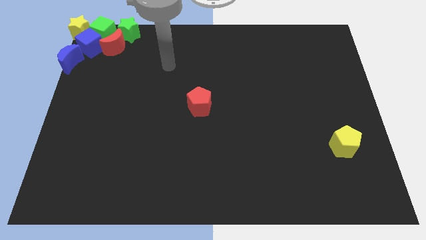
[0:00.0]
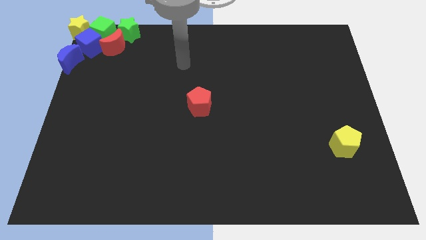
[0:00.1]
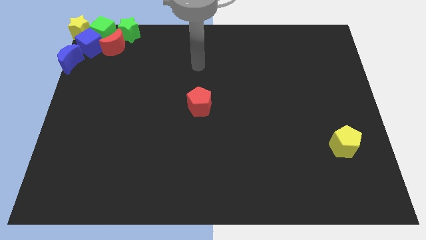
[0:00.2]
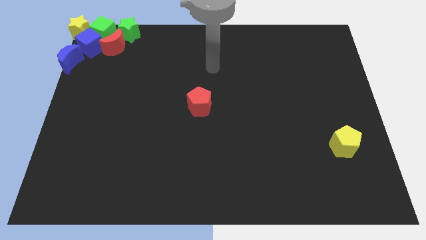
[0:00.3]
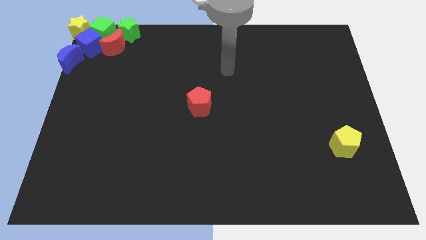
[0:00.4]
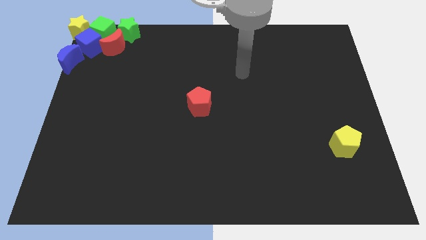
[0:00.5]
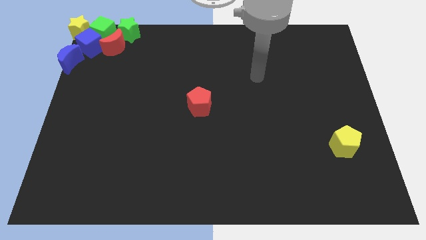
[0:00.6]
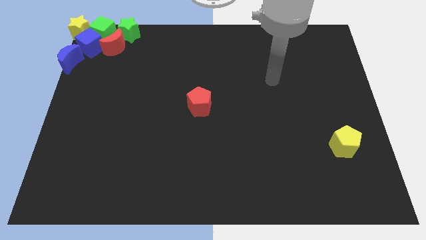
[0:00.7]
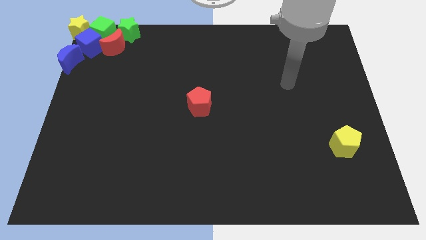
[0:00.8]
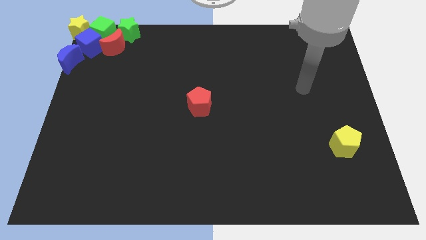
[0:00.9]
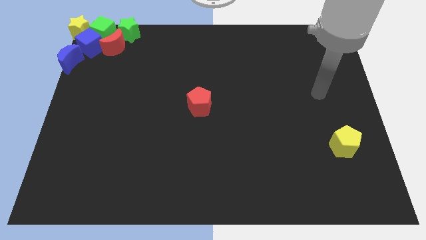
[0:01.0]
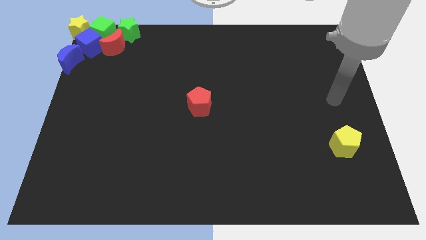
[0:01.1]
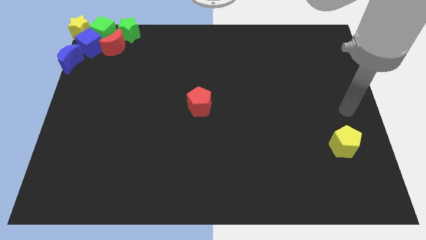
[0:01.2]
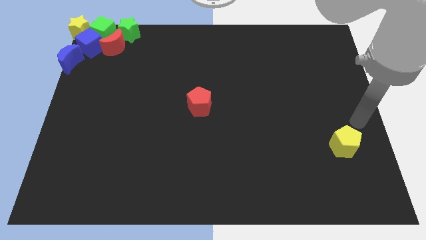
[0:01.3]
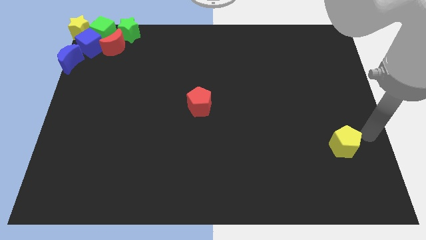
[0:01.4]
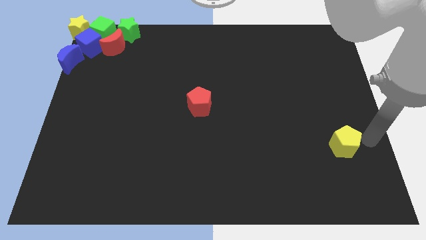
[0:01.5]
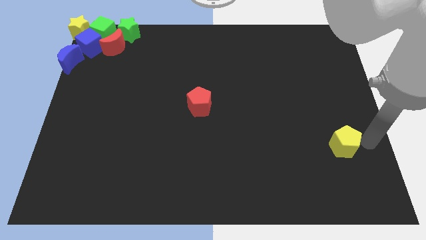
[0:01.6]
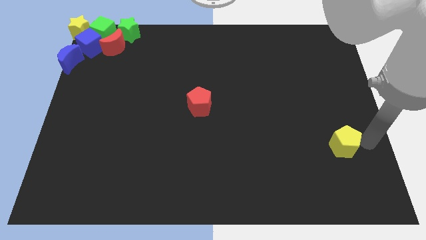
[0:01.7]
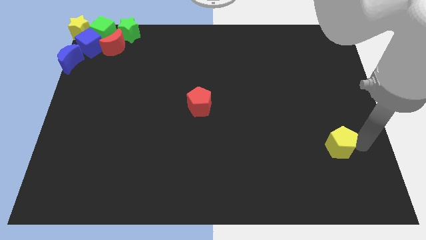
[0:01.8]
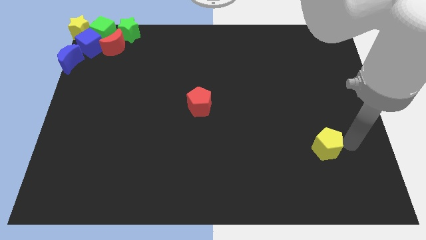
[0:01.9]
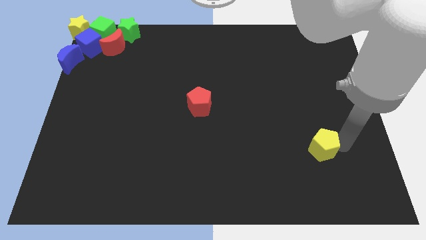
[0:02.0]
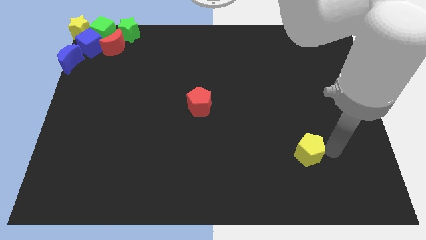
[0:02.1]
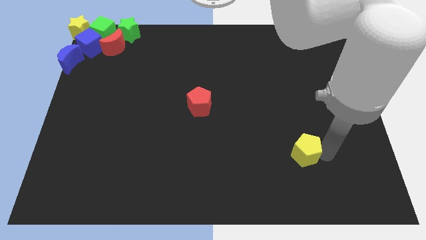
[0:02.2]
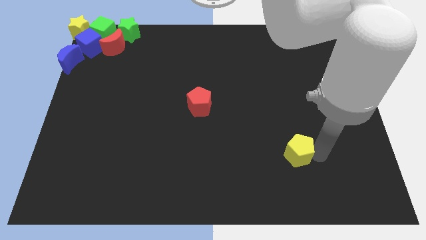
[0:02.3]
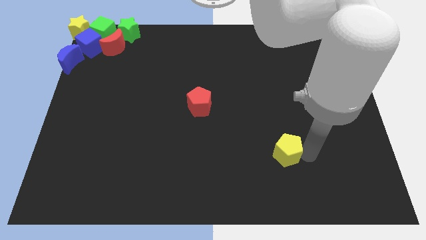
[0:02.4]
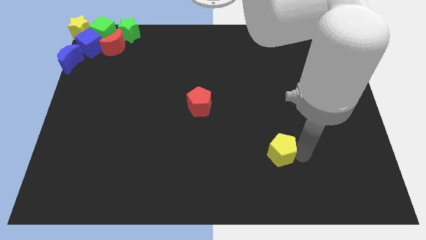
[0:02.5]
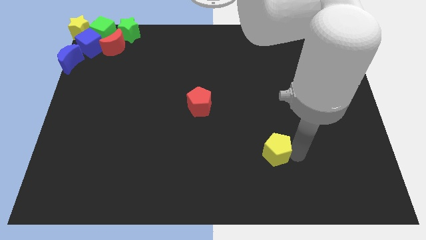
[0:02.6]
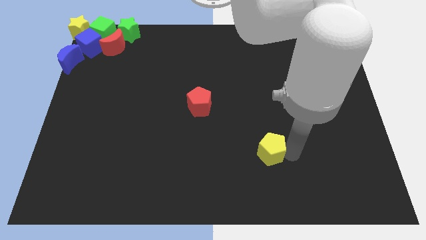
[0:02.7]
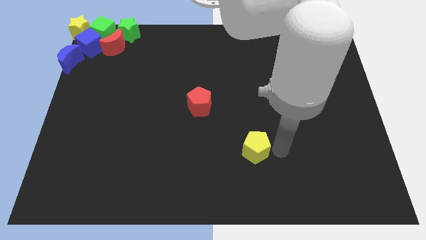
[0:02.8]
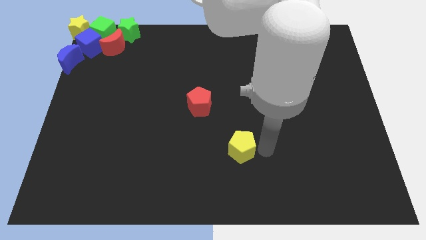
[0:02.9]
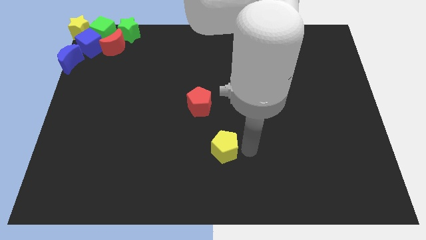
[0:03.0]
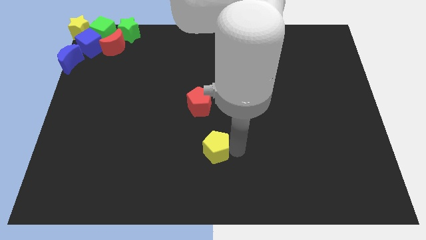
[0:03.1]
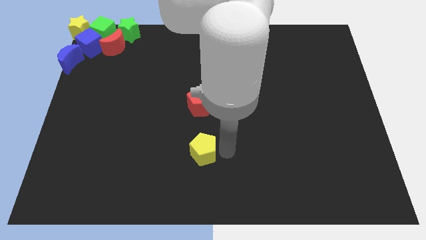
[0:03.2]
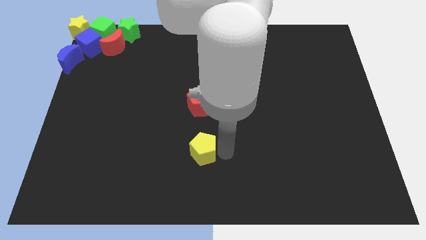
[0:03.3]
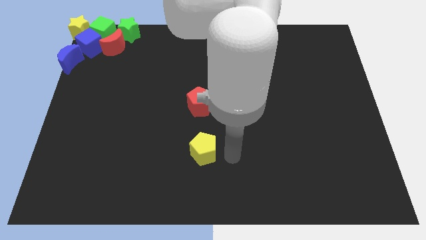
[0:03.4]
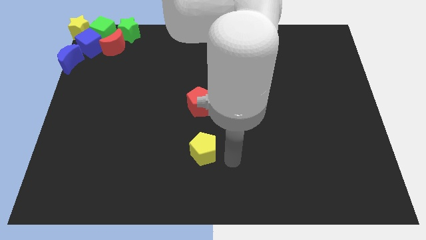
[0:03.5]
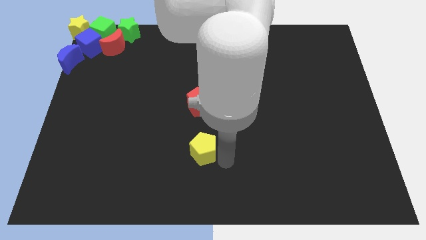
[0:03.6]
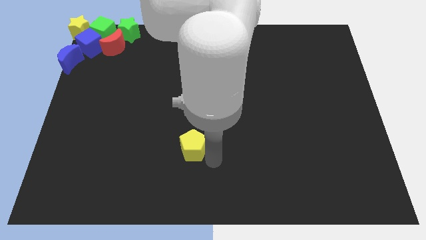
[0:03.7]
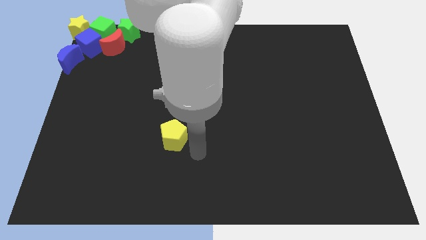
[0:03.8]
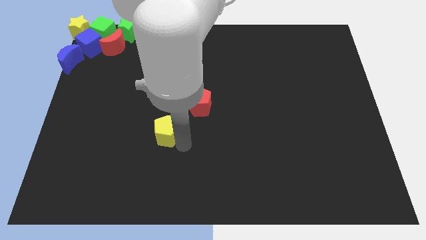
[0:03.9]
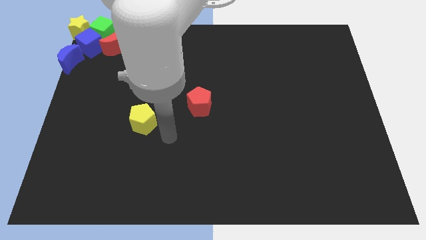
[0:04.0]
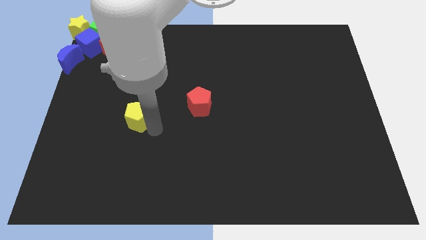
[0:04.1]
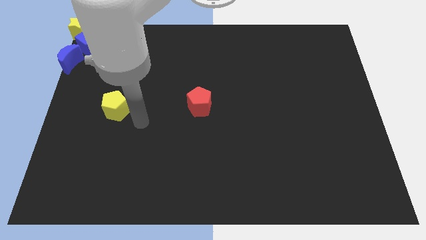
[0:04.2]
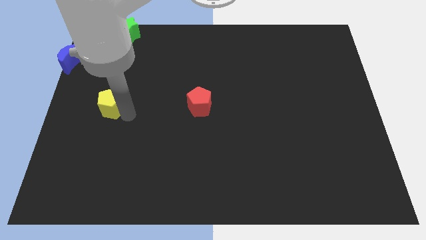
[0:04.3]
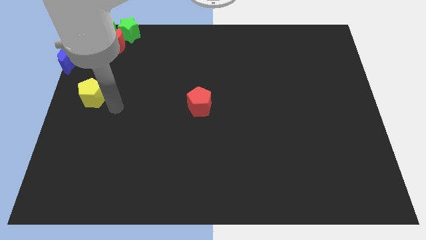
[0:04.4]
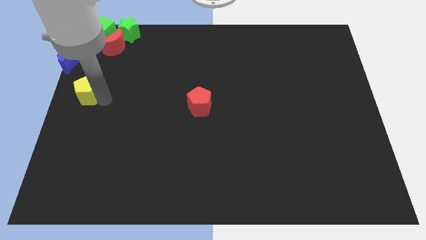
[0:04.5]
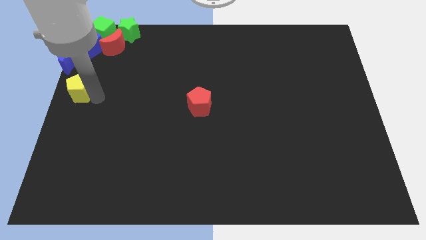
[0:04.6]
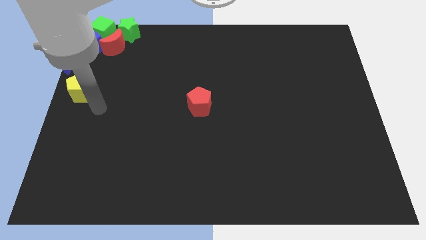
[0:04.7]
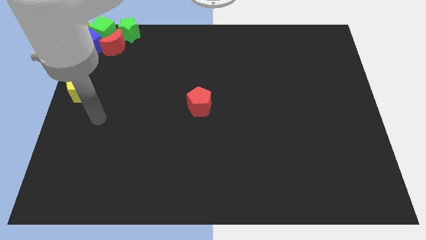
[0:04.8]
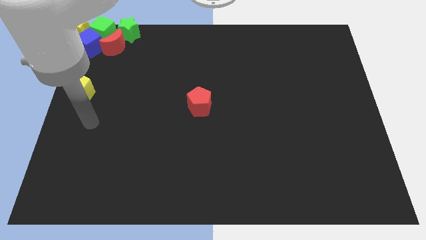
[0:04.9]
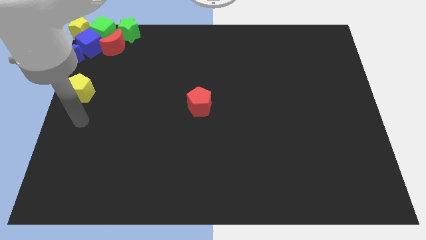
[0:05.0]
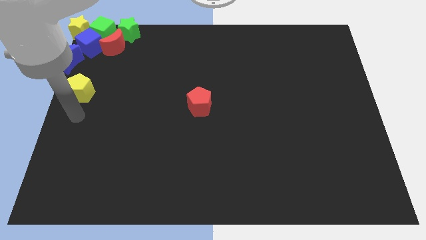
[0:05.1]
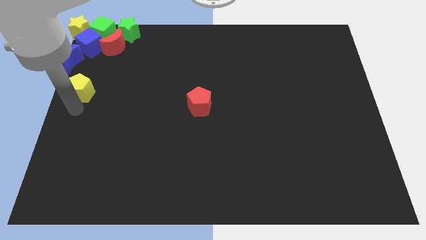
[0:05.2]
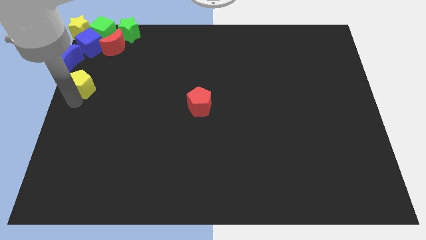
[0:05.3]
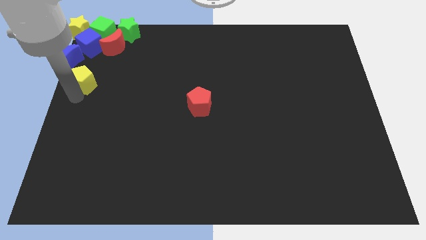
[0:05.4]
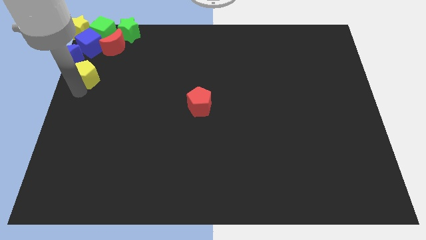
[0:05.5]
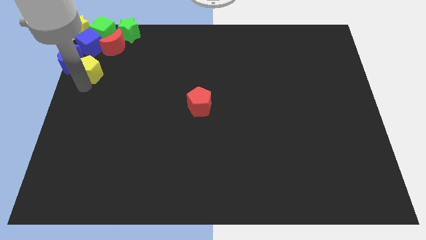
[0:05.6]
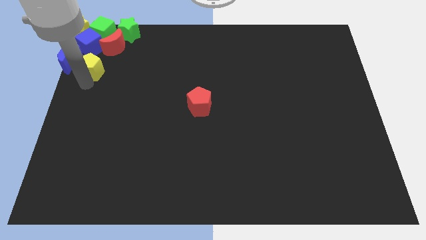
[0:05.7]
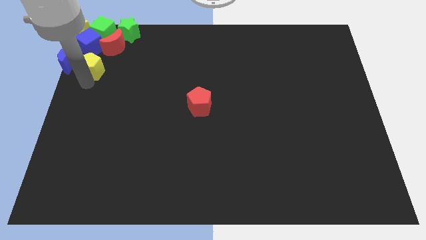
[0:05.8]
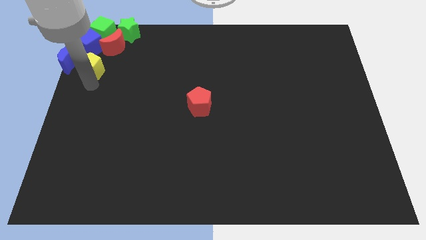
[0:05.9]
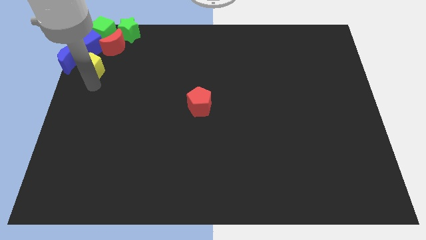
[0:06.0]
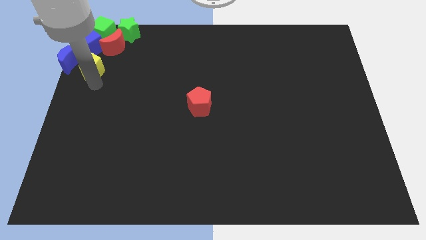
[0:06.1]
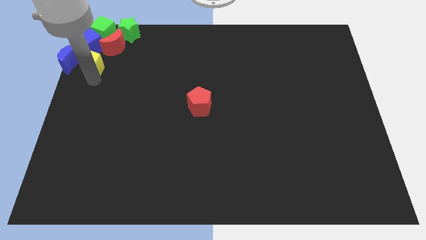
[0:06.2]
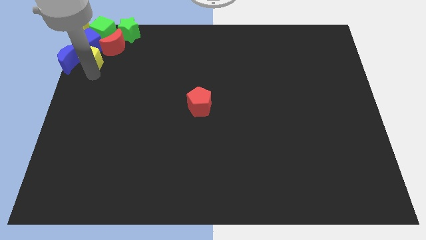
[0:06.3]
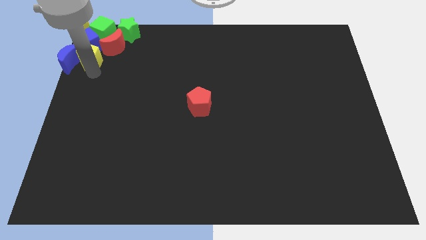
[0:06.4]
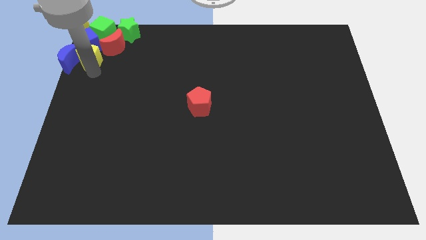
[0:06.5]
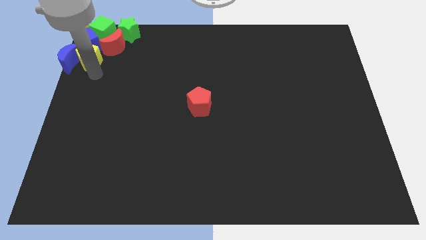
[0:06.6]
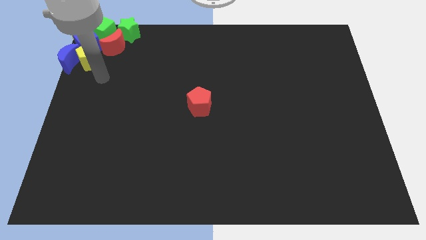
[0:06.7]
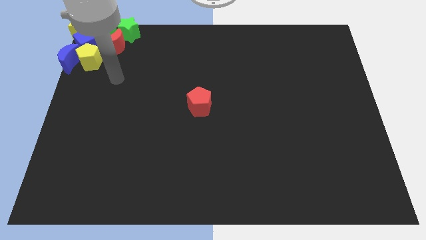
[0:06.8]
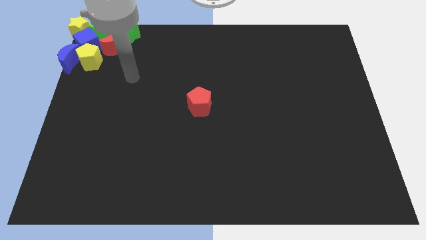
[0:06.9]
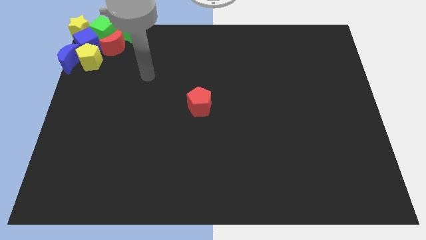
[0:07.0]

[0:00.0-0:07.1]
push the yellow pentagon towards the right side of the blue crescent

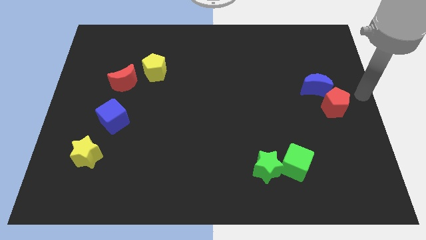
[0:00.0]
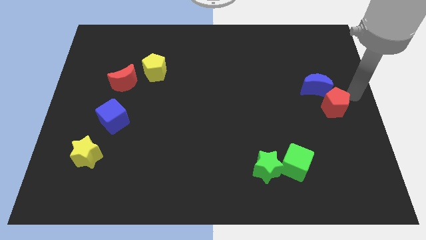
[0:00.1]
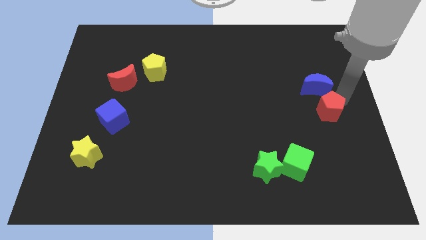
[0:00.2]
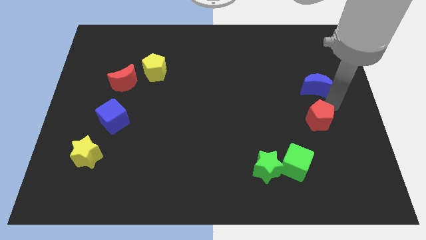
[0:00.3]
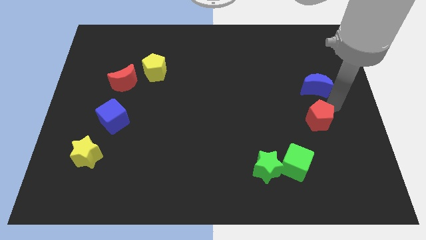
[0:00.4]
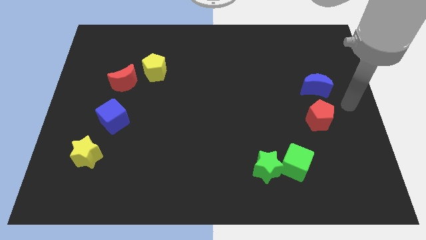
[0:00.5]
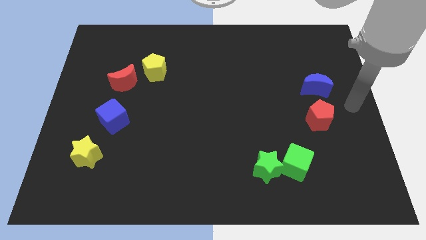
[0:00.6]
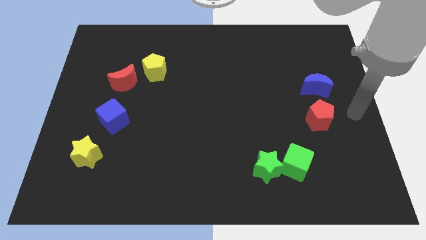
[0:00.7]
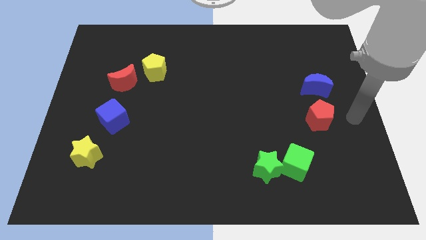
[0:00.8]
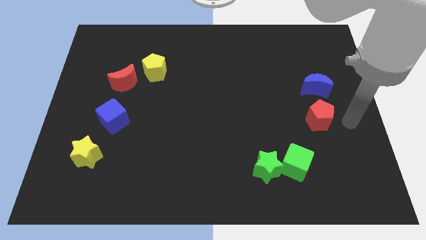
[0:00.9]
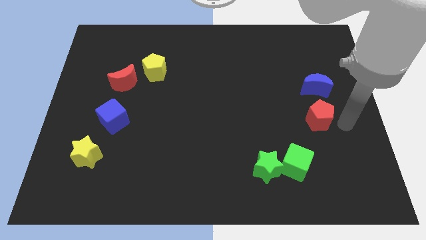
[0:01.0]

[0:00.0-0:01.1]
place red pentagon in between green cube and blue crescent

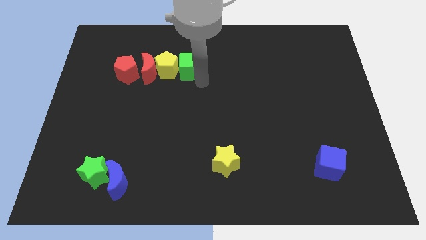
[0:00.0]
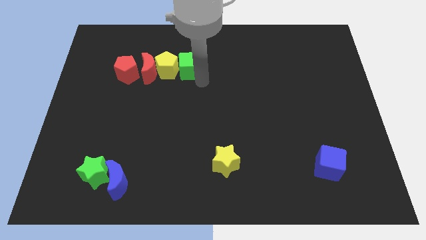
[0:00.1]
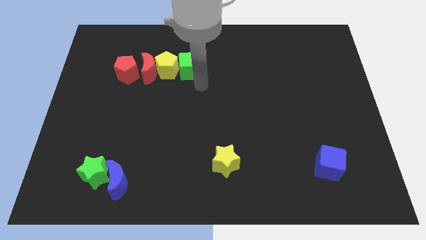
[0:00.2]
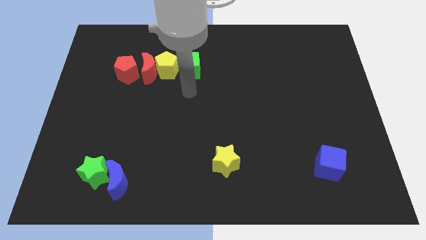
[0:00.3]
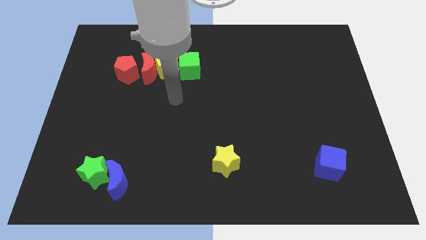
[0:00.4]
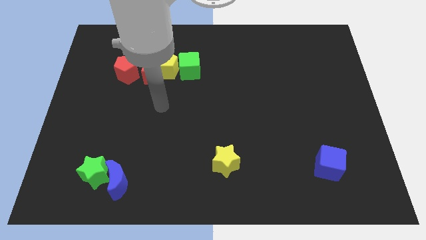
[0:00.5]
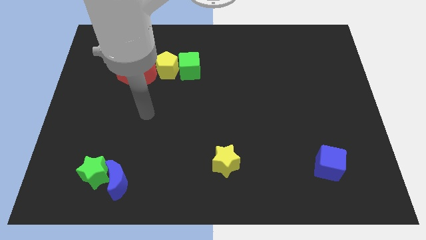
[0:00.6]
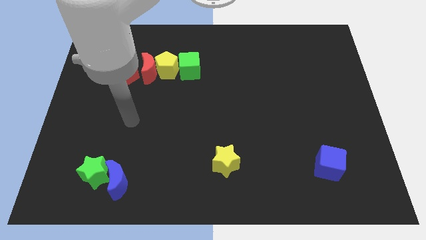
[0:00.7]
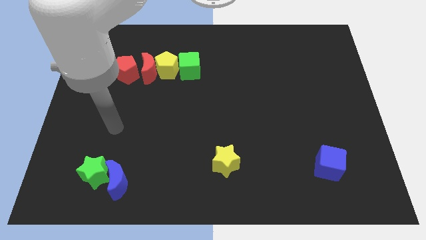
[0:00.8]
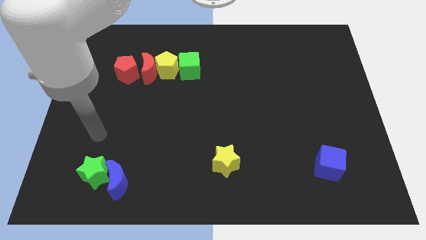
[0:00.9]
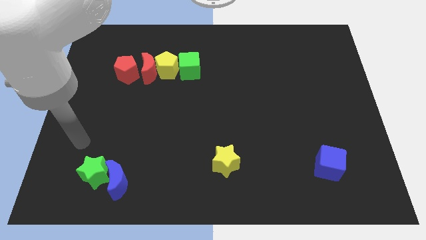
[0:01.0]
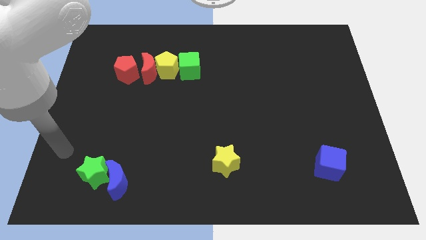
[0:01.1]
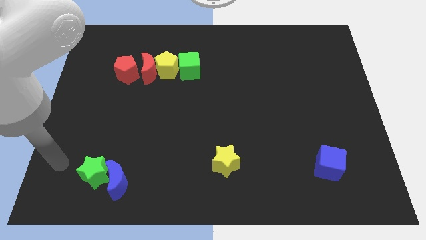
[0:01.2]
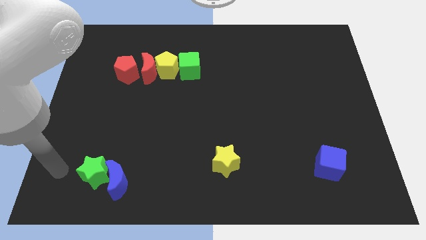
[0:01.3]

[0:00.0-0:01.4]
point your arm at the left of the green star
